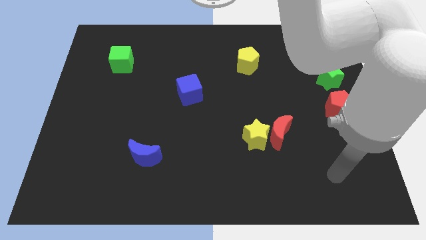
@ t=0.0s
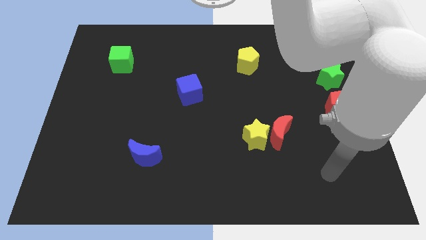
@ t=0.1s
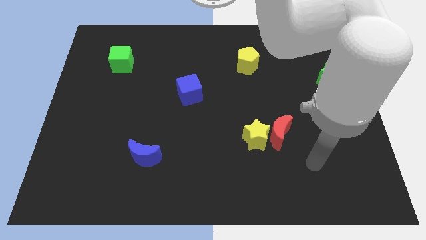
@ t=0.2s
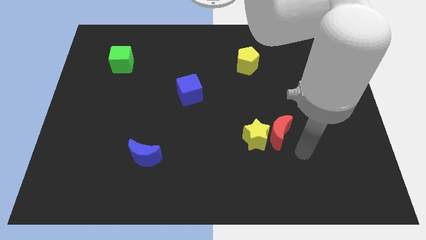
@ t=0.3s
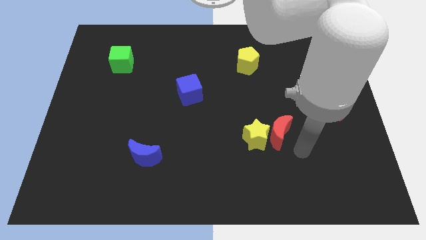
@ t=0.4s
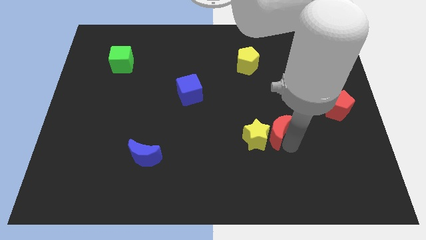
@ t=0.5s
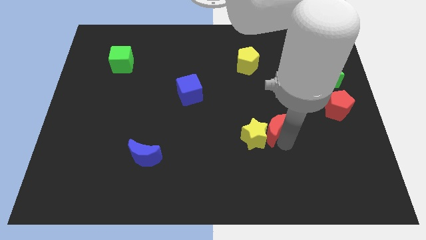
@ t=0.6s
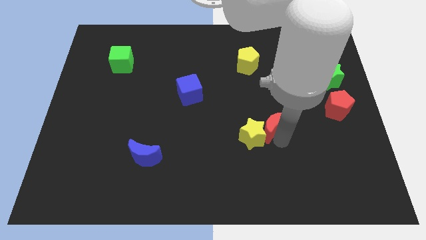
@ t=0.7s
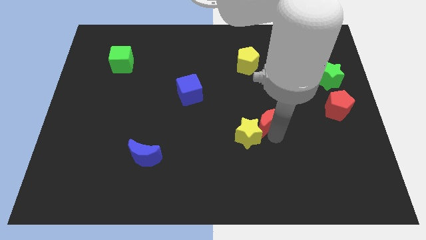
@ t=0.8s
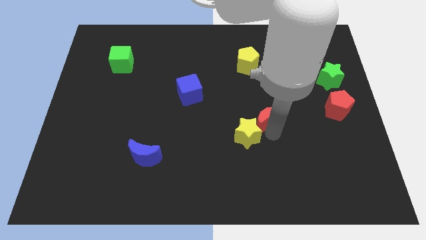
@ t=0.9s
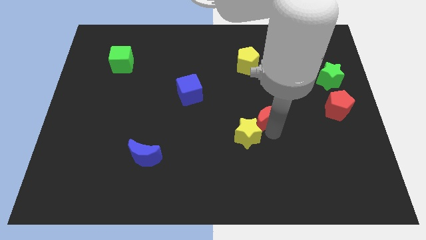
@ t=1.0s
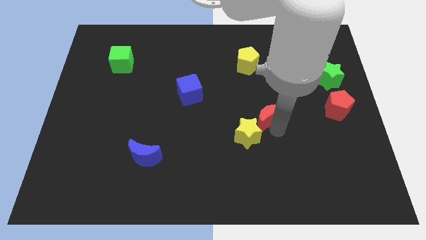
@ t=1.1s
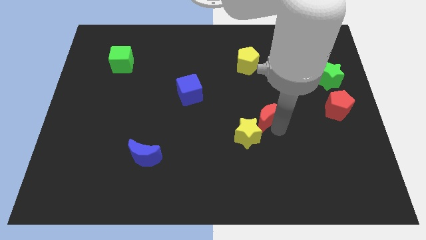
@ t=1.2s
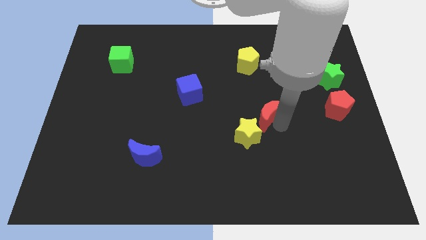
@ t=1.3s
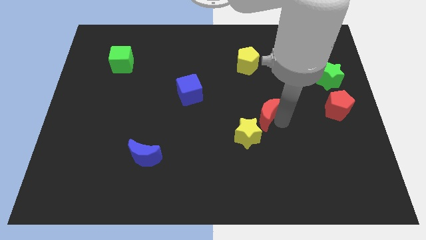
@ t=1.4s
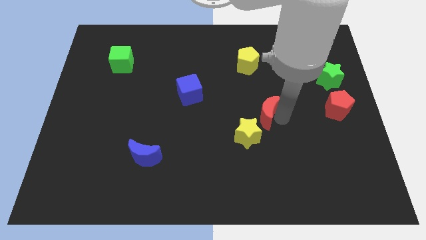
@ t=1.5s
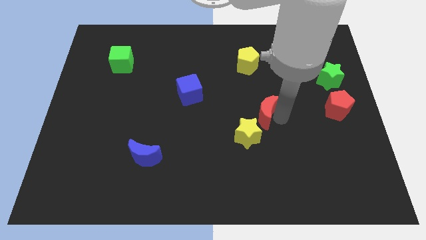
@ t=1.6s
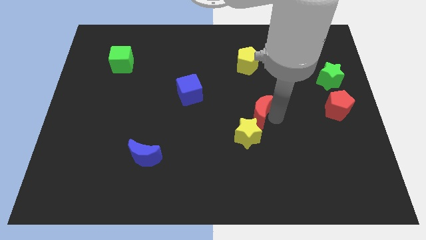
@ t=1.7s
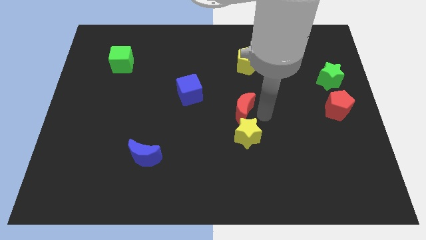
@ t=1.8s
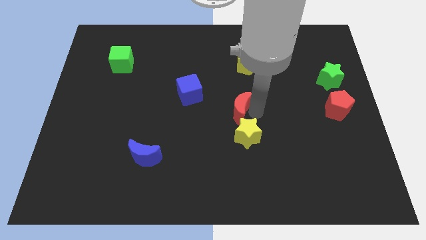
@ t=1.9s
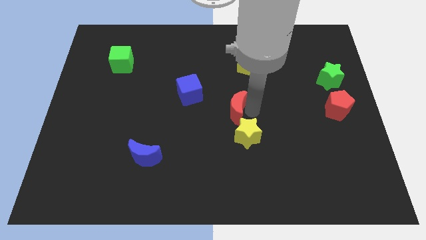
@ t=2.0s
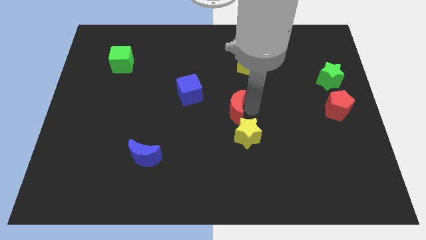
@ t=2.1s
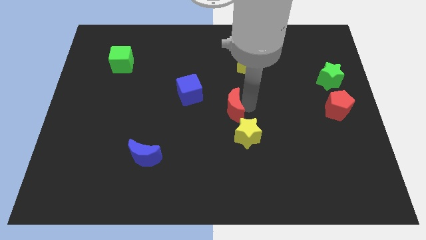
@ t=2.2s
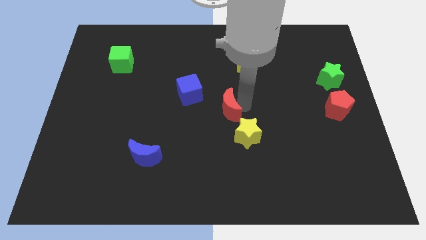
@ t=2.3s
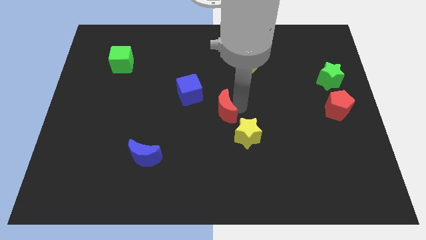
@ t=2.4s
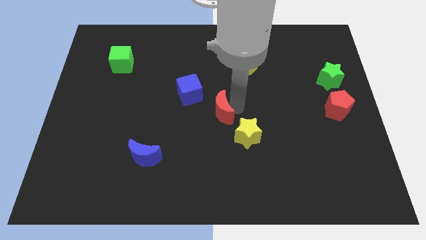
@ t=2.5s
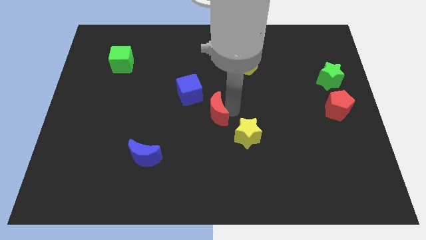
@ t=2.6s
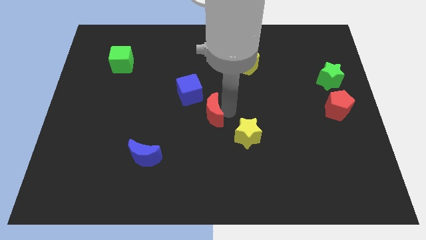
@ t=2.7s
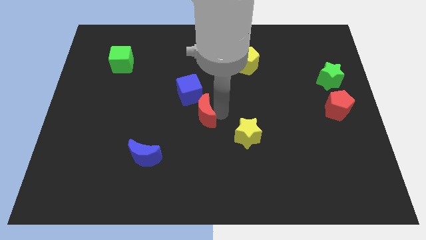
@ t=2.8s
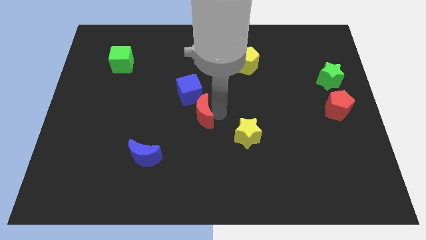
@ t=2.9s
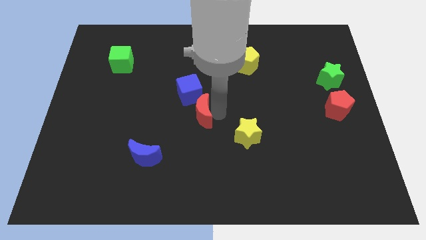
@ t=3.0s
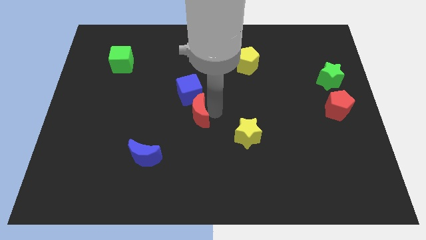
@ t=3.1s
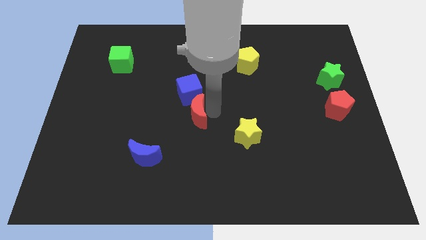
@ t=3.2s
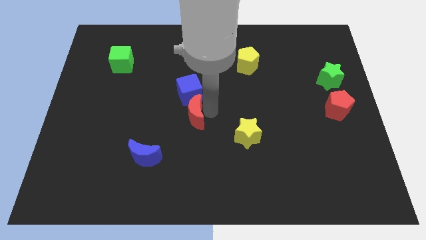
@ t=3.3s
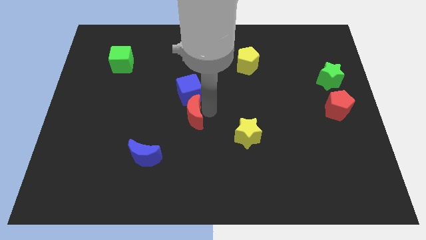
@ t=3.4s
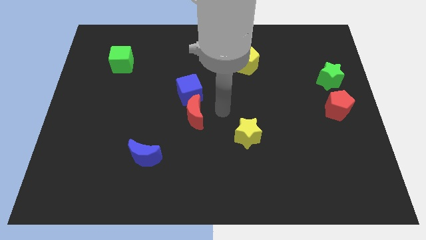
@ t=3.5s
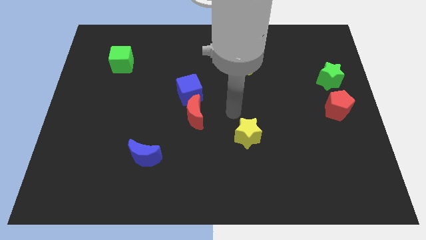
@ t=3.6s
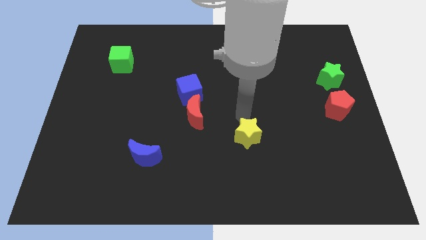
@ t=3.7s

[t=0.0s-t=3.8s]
move the red moon to the bottom side of the blue cube

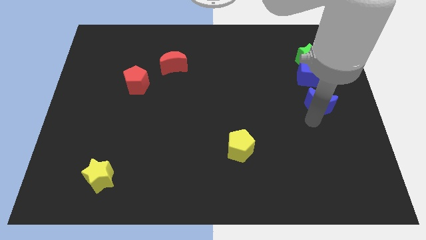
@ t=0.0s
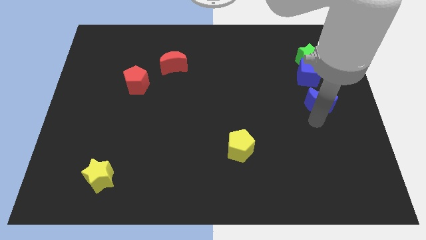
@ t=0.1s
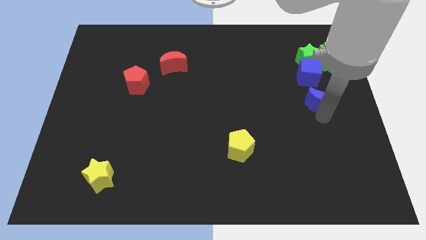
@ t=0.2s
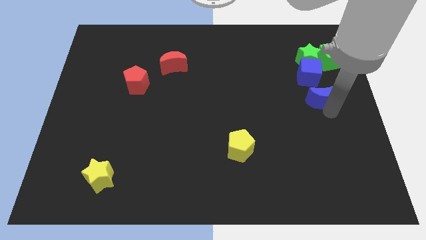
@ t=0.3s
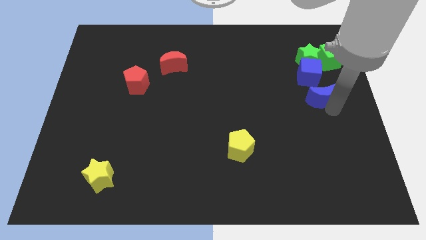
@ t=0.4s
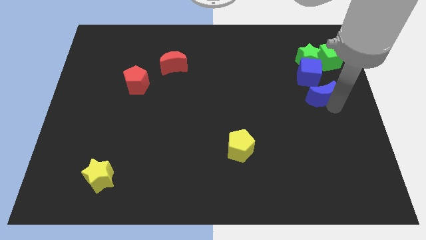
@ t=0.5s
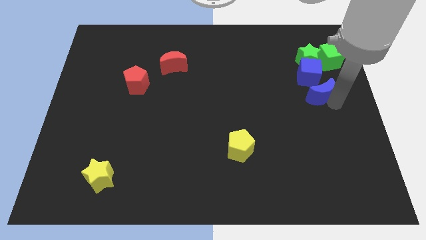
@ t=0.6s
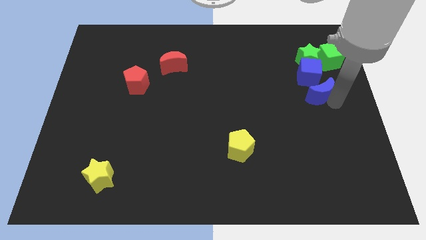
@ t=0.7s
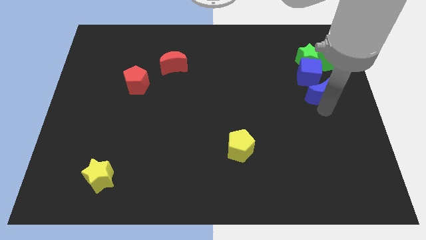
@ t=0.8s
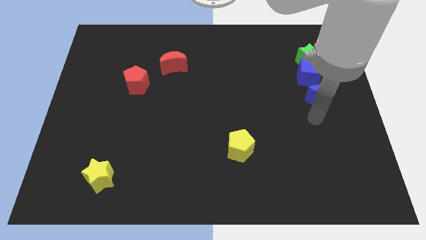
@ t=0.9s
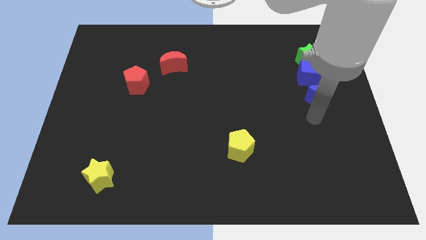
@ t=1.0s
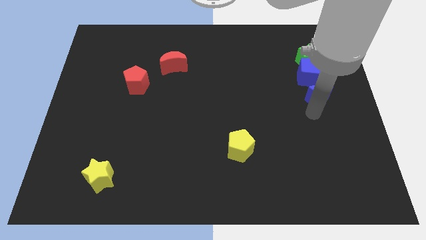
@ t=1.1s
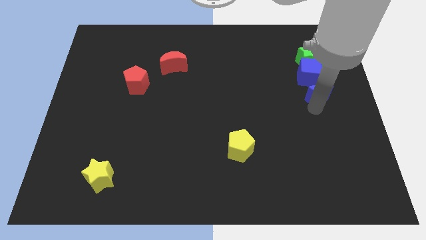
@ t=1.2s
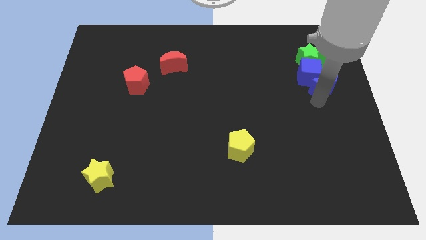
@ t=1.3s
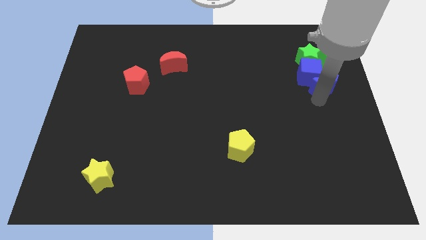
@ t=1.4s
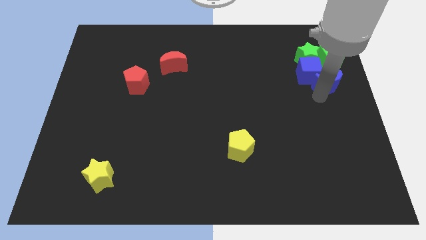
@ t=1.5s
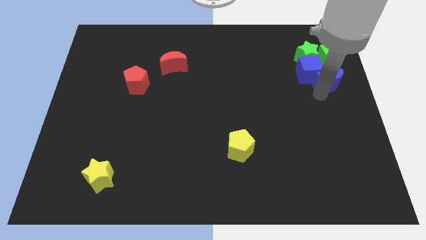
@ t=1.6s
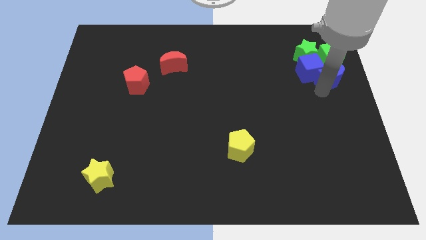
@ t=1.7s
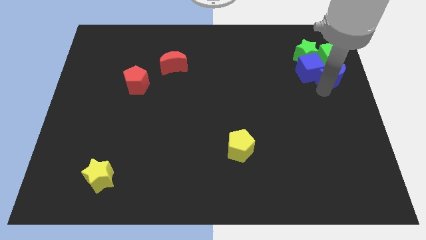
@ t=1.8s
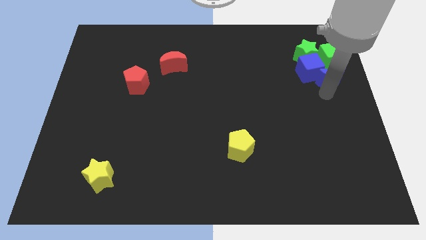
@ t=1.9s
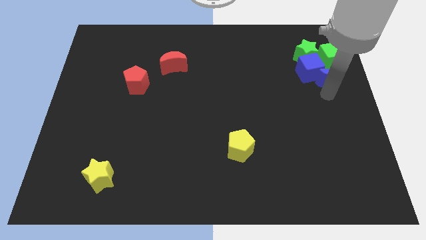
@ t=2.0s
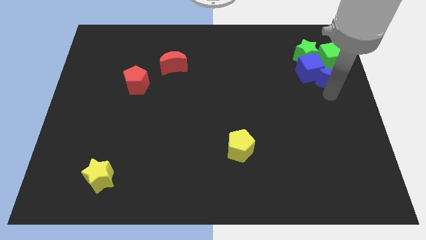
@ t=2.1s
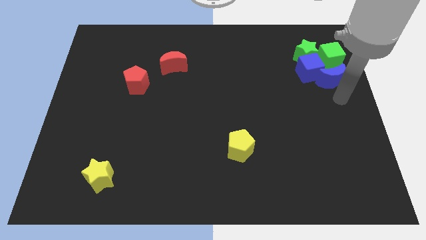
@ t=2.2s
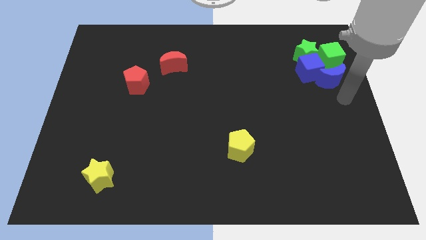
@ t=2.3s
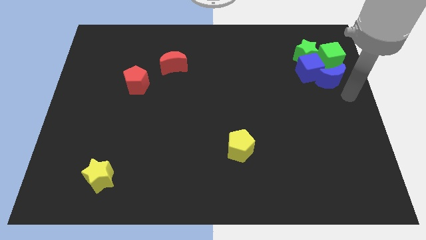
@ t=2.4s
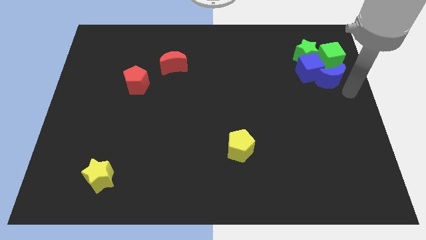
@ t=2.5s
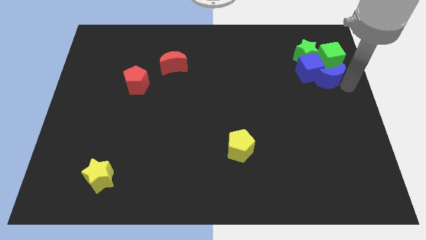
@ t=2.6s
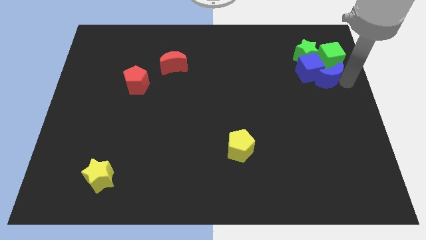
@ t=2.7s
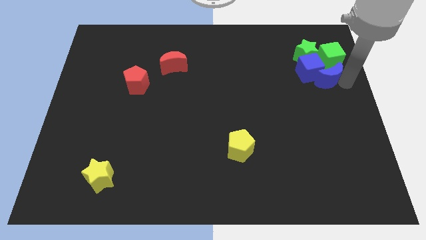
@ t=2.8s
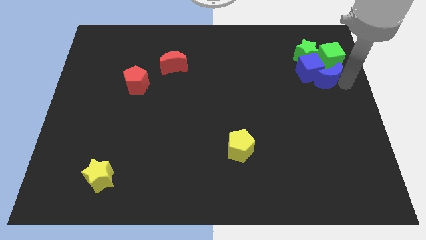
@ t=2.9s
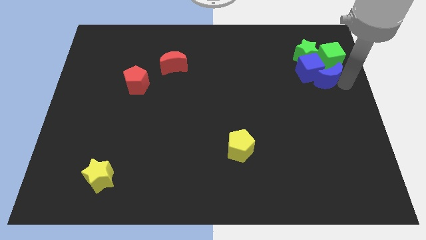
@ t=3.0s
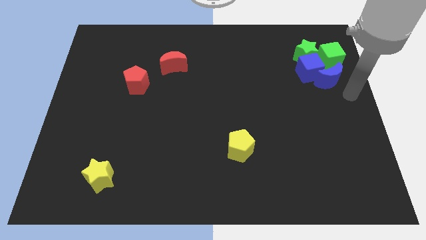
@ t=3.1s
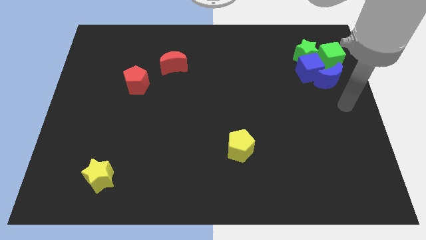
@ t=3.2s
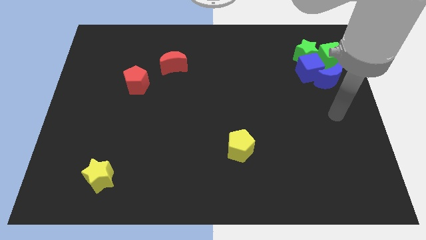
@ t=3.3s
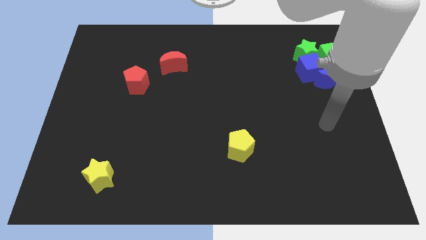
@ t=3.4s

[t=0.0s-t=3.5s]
push the green and blue blocks towards the top side of the board

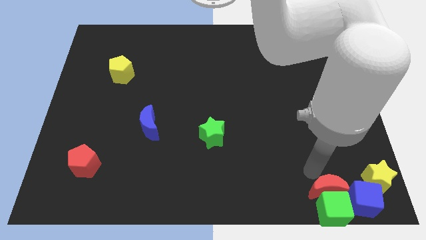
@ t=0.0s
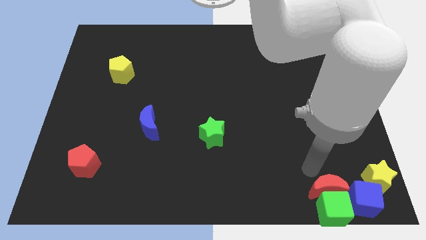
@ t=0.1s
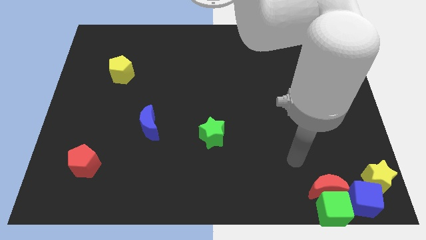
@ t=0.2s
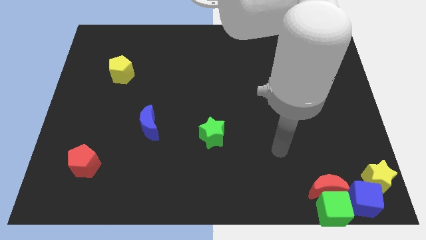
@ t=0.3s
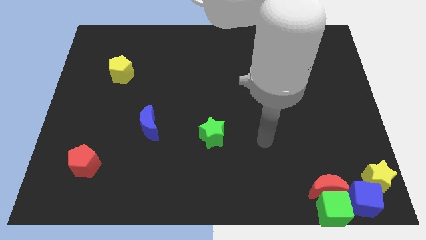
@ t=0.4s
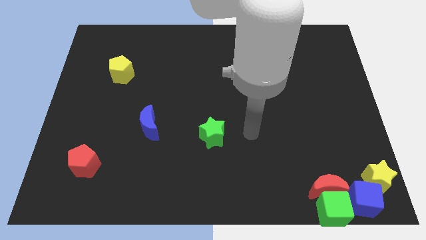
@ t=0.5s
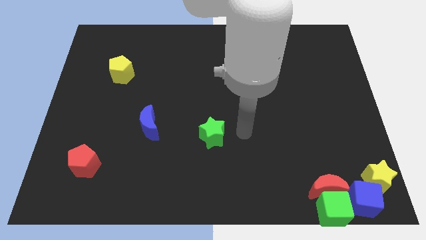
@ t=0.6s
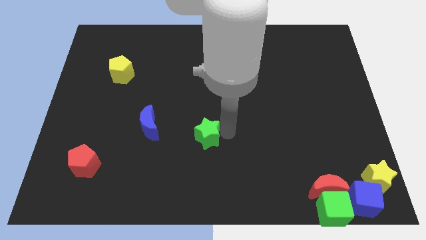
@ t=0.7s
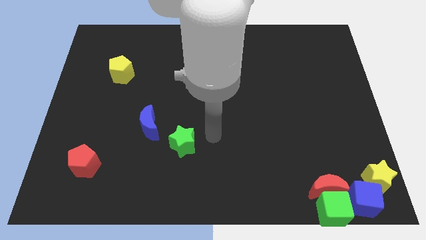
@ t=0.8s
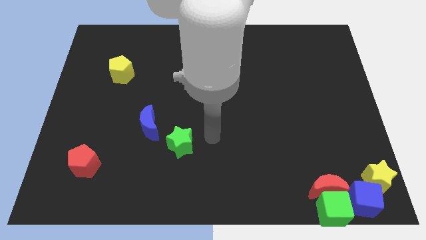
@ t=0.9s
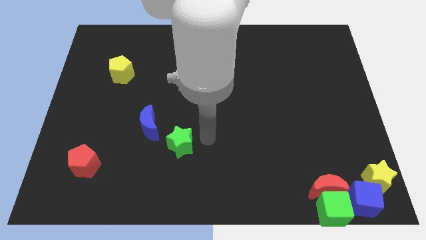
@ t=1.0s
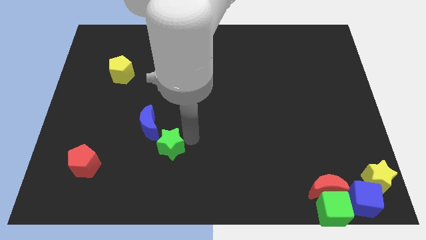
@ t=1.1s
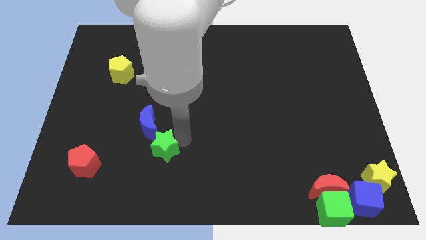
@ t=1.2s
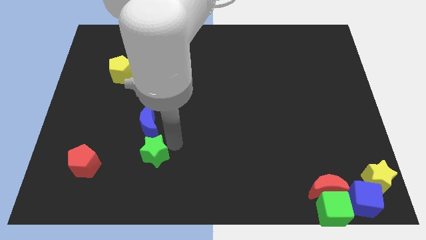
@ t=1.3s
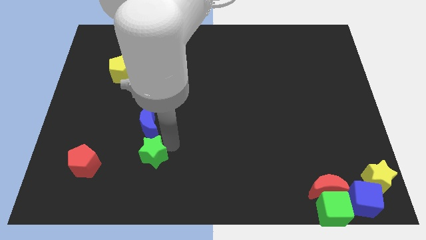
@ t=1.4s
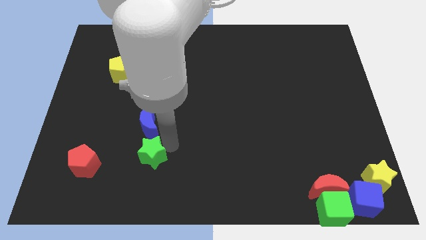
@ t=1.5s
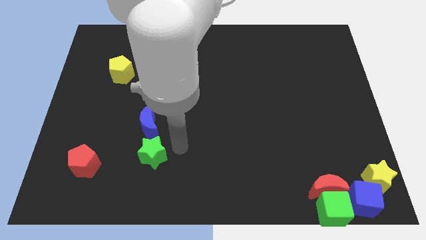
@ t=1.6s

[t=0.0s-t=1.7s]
move the green star to the bottom of the blue crescent
